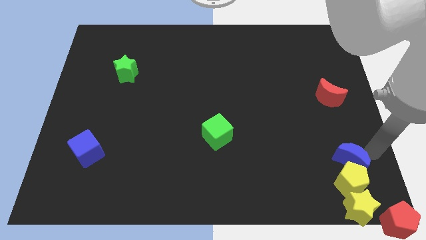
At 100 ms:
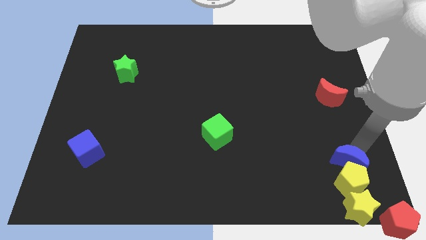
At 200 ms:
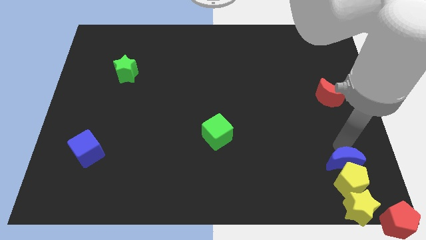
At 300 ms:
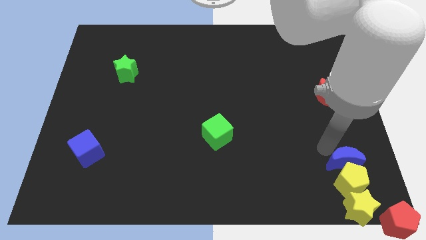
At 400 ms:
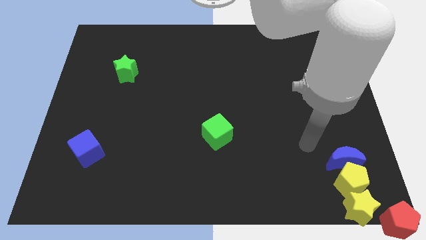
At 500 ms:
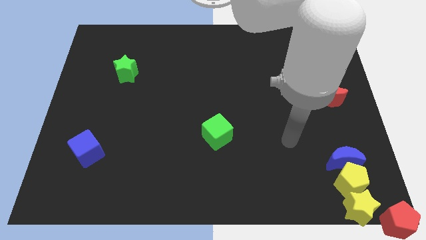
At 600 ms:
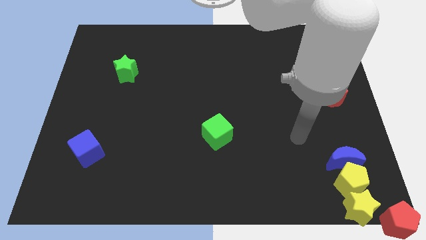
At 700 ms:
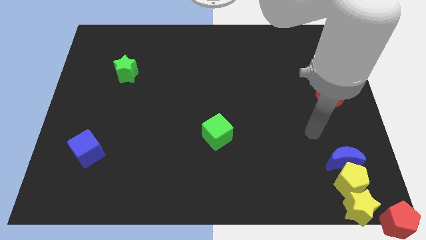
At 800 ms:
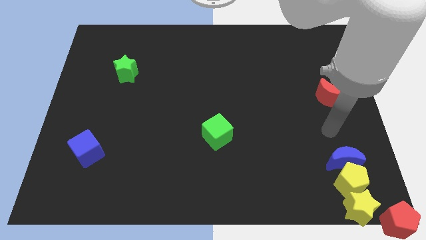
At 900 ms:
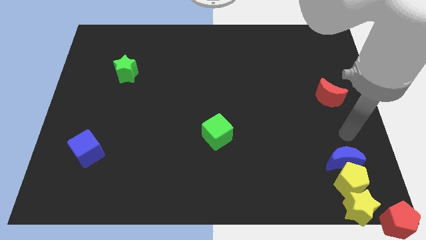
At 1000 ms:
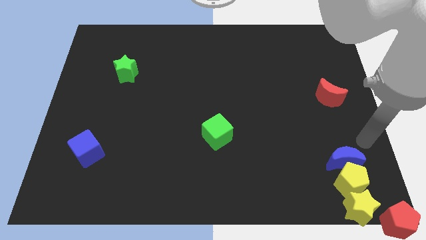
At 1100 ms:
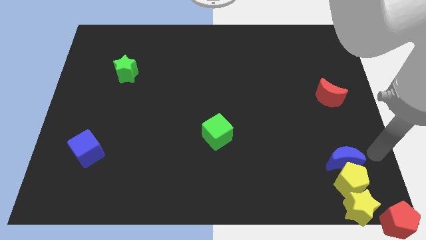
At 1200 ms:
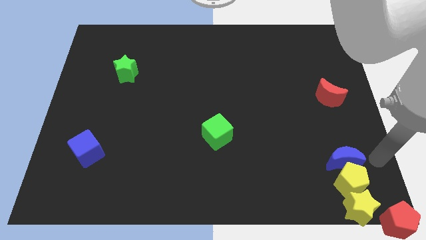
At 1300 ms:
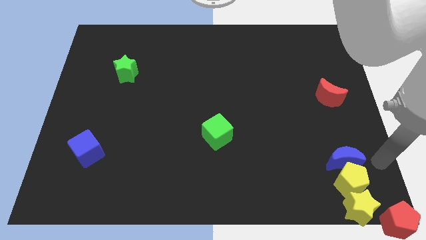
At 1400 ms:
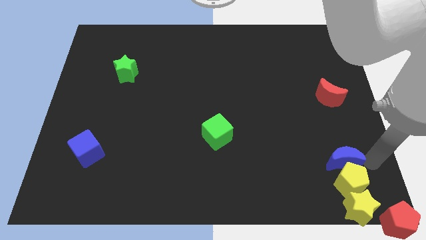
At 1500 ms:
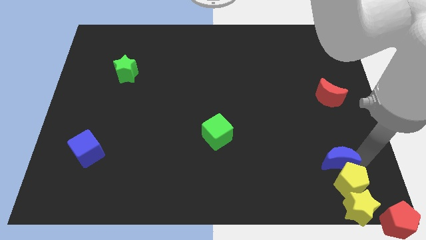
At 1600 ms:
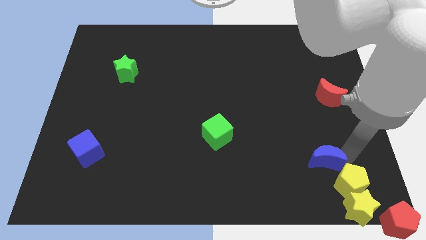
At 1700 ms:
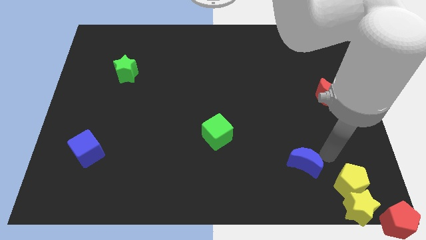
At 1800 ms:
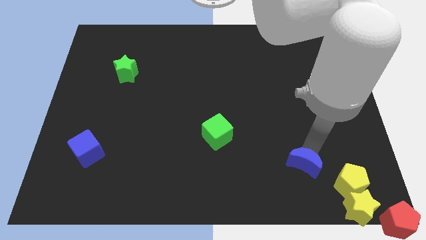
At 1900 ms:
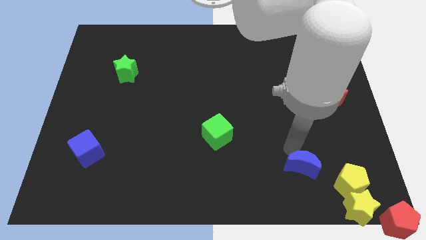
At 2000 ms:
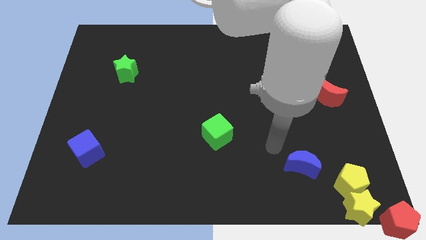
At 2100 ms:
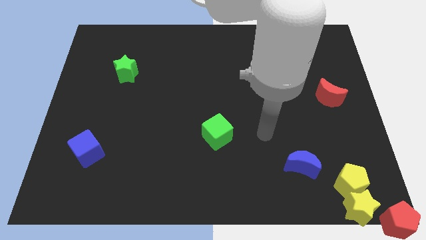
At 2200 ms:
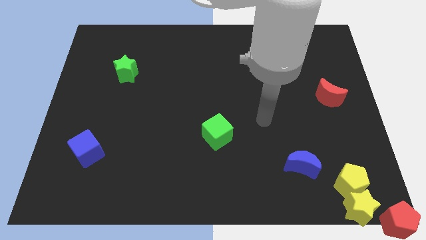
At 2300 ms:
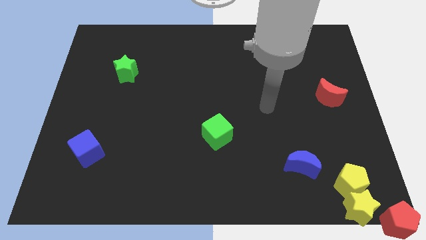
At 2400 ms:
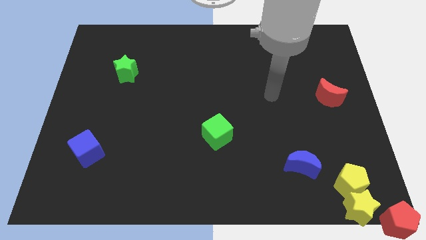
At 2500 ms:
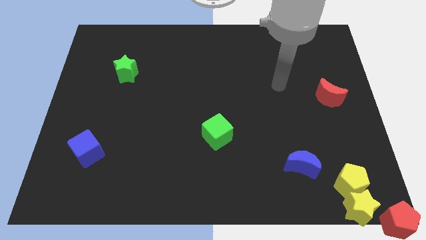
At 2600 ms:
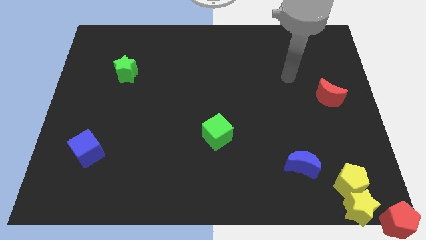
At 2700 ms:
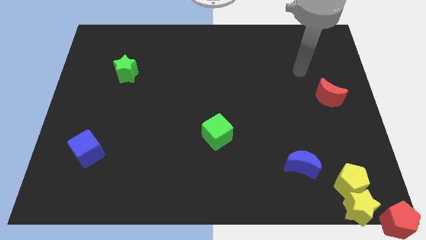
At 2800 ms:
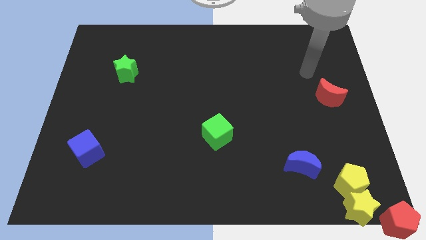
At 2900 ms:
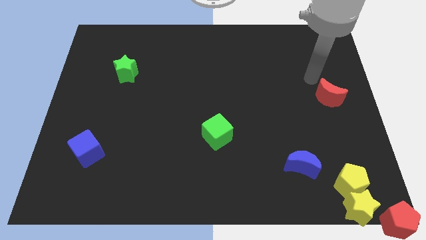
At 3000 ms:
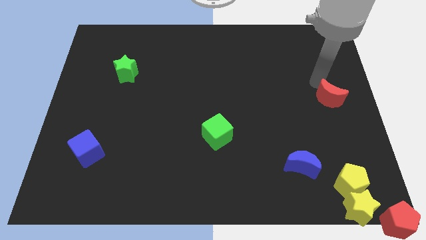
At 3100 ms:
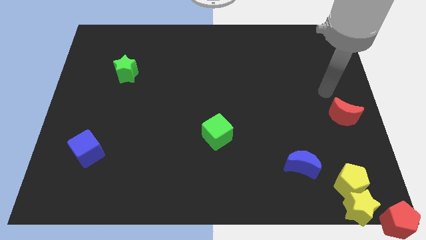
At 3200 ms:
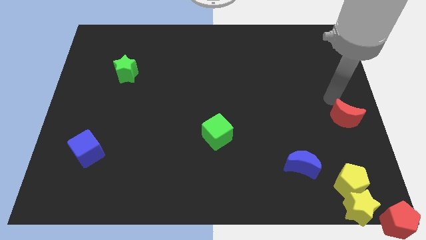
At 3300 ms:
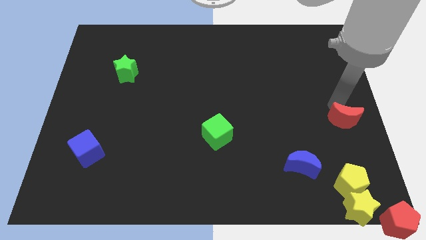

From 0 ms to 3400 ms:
move the blue moon slightly left

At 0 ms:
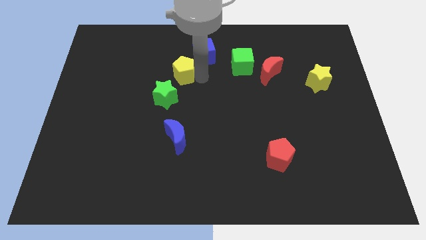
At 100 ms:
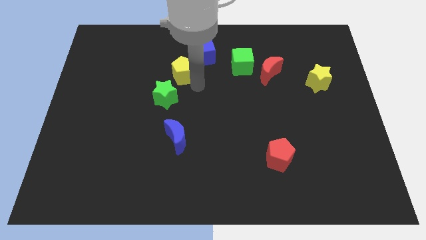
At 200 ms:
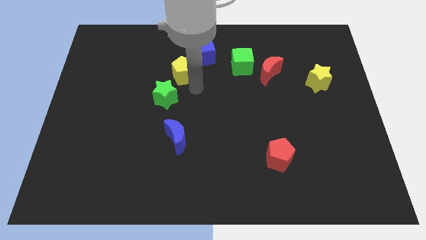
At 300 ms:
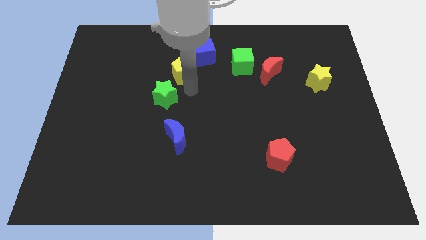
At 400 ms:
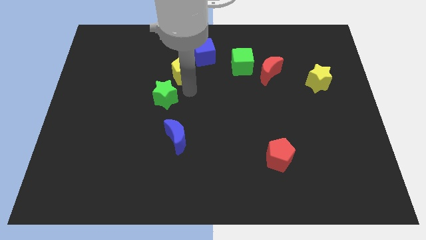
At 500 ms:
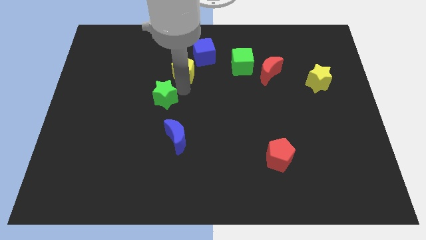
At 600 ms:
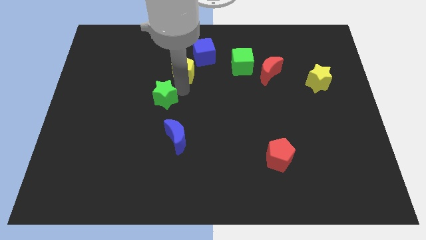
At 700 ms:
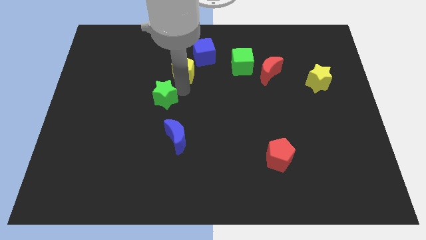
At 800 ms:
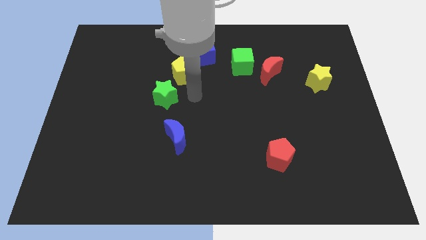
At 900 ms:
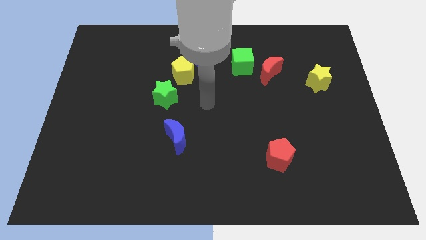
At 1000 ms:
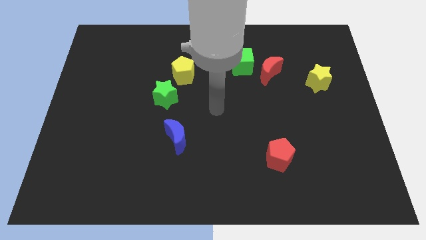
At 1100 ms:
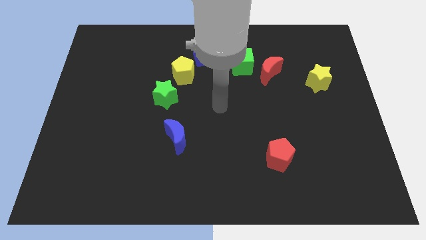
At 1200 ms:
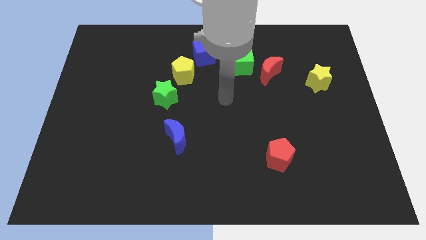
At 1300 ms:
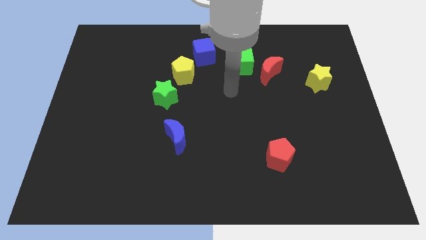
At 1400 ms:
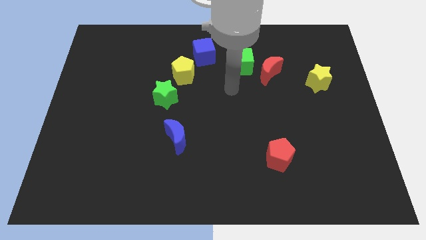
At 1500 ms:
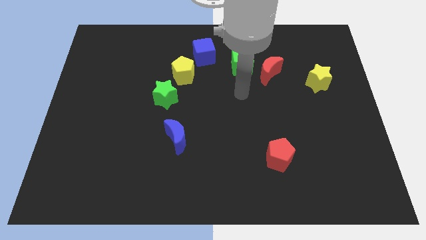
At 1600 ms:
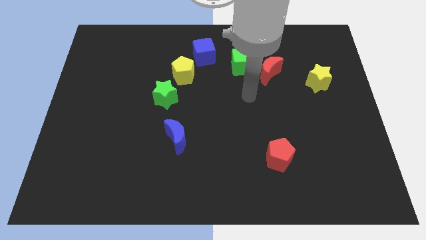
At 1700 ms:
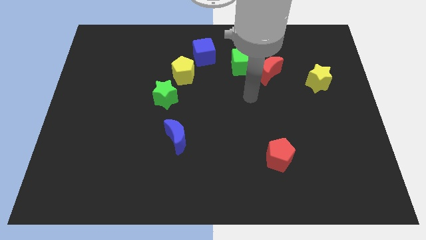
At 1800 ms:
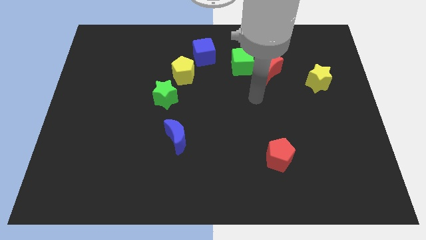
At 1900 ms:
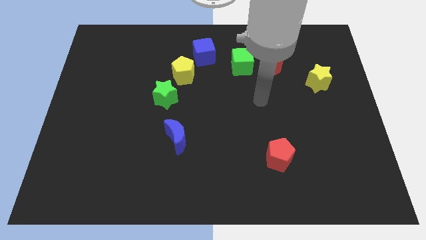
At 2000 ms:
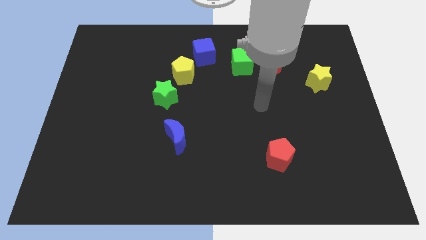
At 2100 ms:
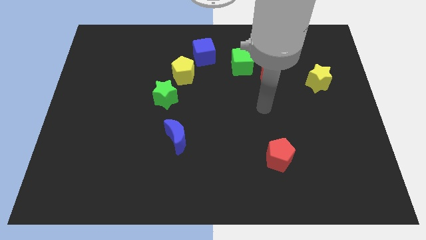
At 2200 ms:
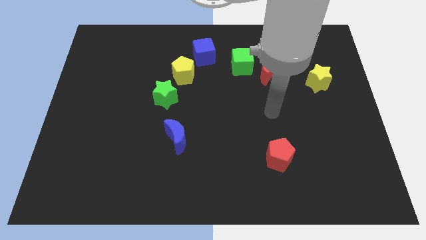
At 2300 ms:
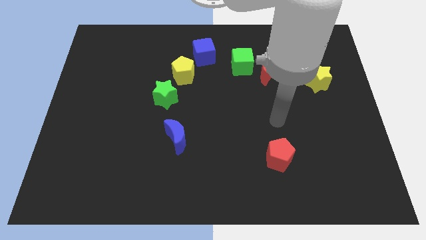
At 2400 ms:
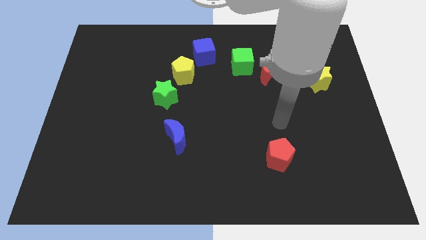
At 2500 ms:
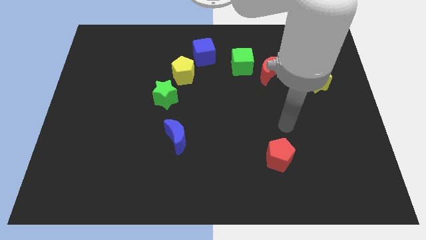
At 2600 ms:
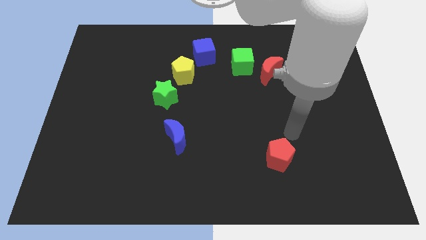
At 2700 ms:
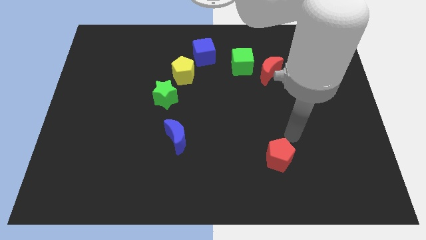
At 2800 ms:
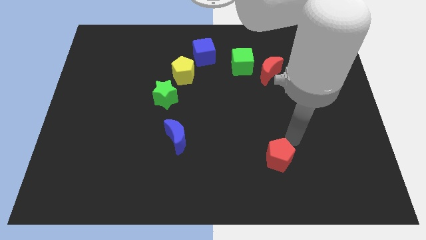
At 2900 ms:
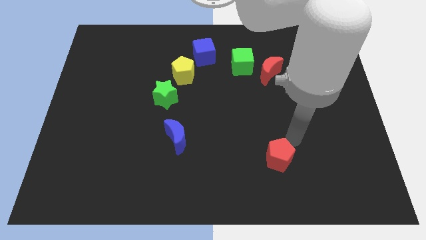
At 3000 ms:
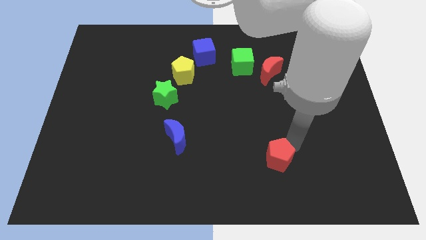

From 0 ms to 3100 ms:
place the arm right to the red pentagon

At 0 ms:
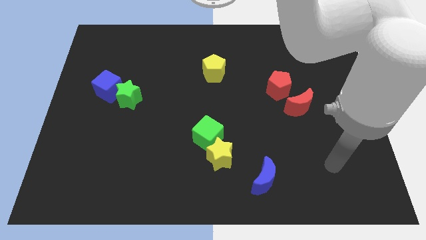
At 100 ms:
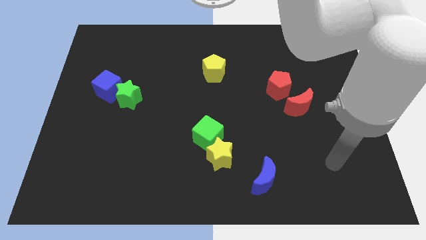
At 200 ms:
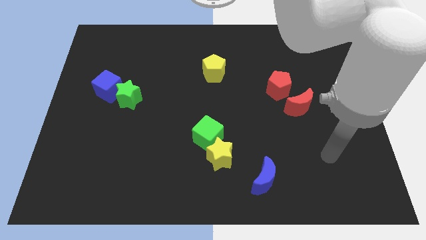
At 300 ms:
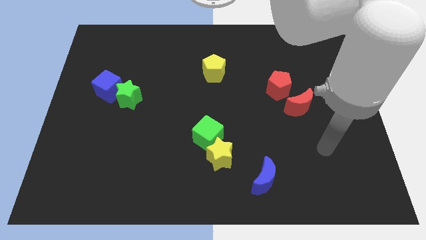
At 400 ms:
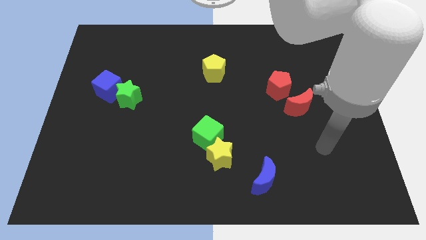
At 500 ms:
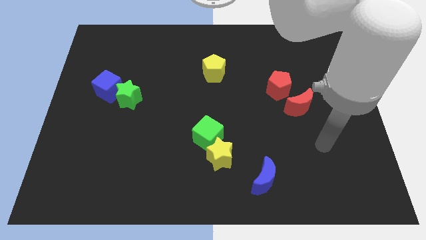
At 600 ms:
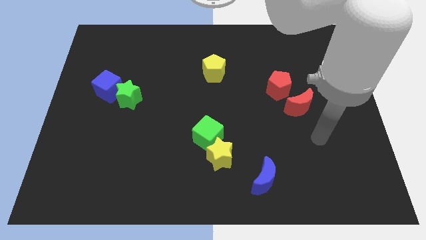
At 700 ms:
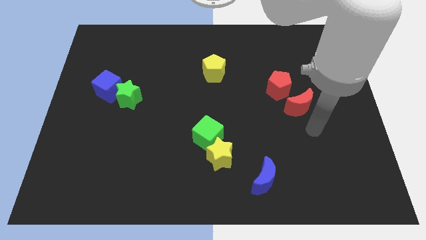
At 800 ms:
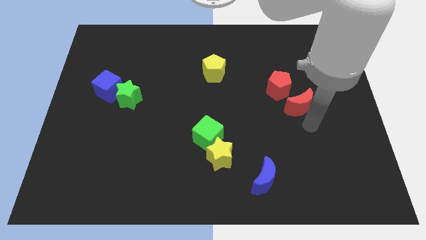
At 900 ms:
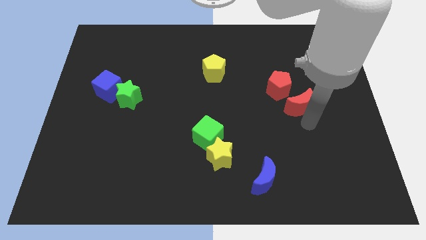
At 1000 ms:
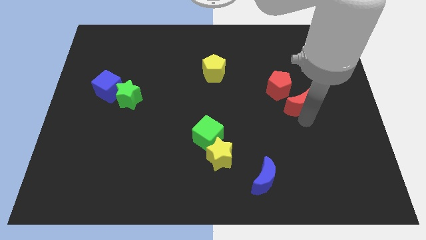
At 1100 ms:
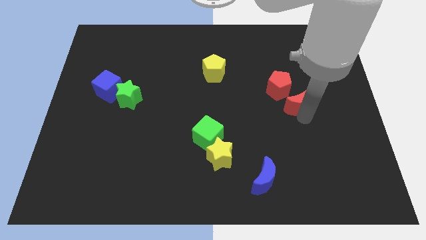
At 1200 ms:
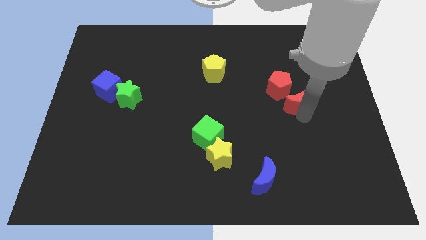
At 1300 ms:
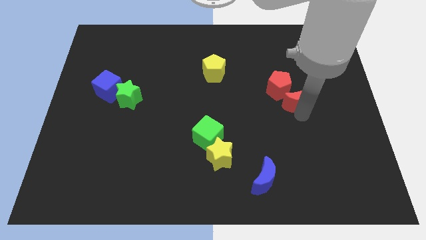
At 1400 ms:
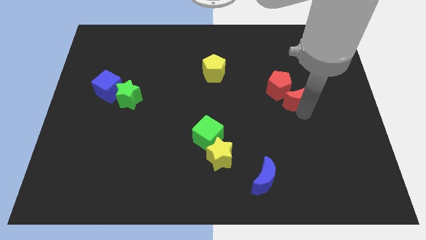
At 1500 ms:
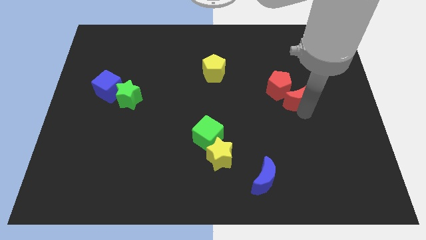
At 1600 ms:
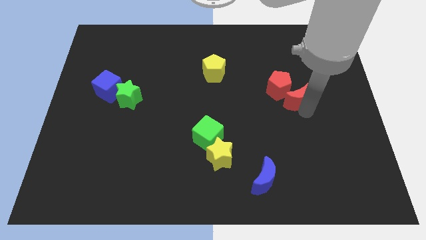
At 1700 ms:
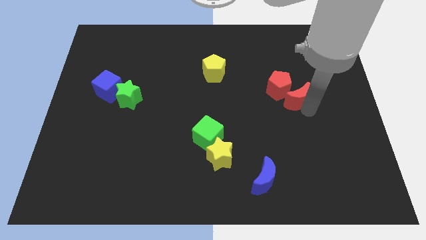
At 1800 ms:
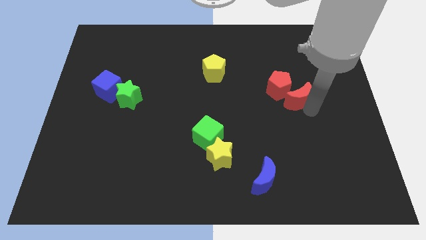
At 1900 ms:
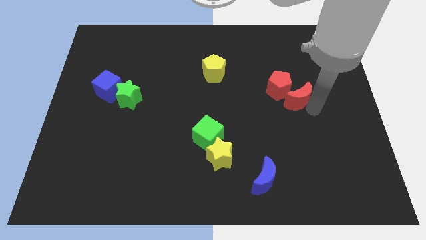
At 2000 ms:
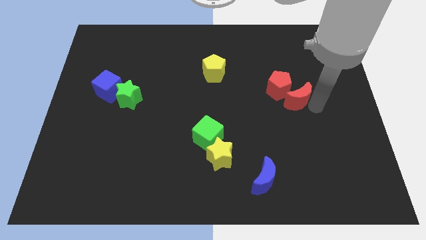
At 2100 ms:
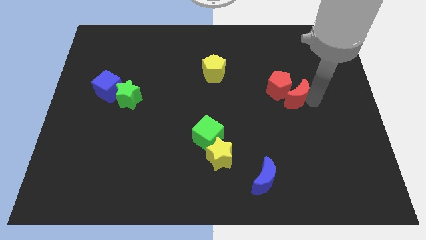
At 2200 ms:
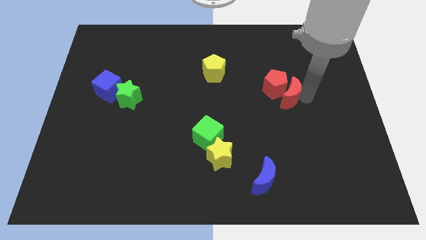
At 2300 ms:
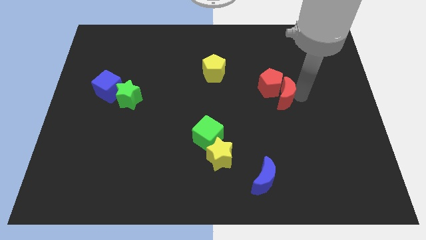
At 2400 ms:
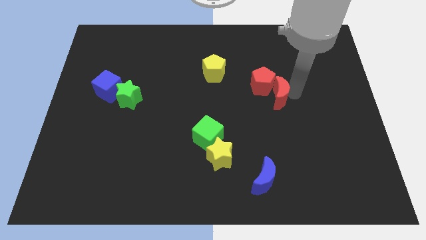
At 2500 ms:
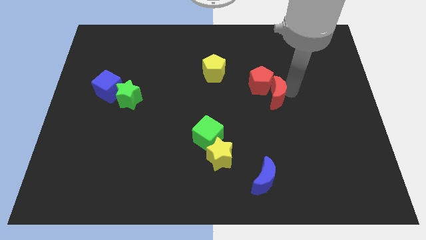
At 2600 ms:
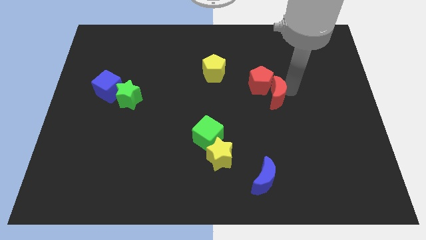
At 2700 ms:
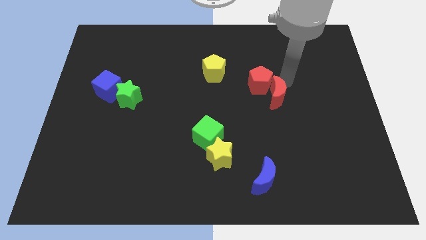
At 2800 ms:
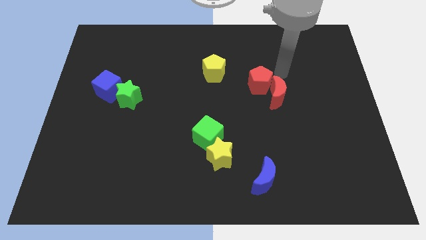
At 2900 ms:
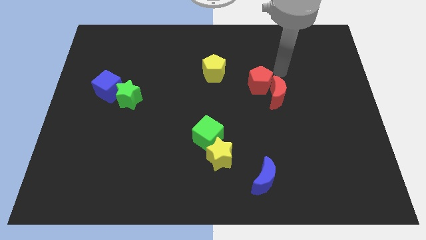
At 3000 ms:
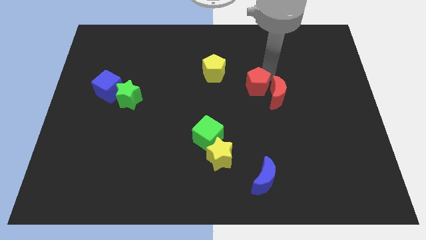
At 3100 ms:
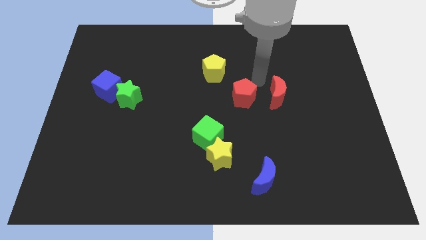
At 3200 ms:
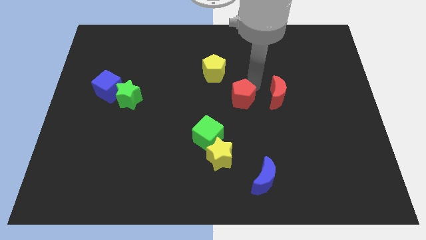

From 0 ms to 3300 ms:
separate the red blocks
